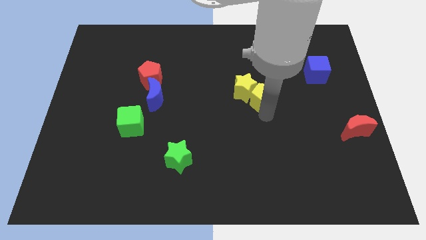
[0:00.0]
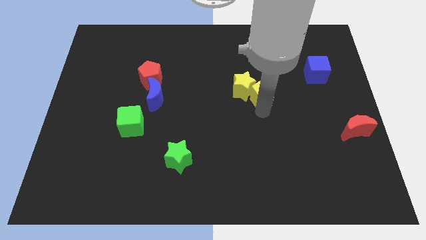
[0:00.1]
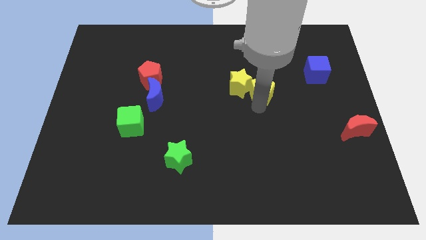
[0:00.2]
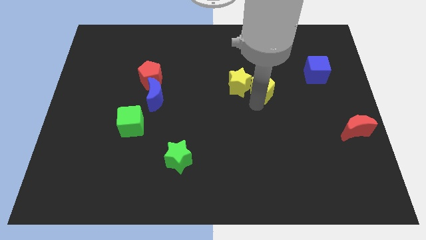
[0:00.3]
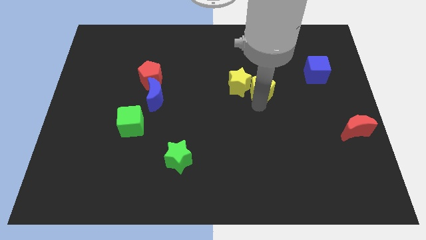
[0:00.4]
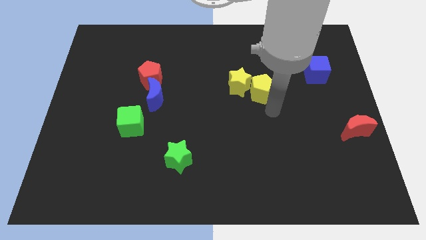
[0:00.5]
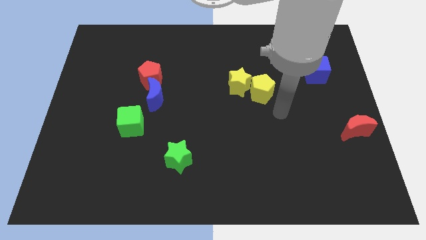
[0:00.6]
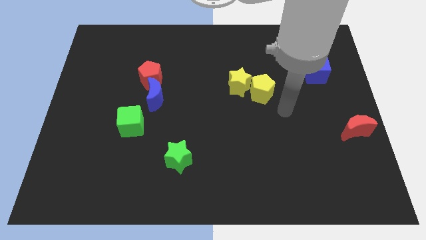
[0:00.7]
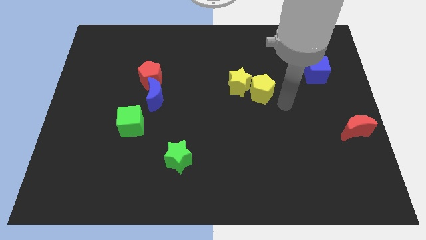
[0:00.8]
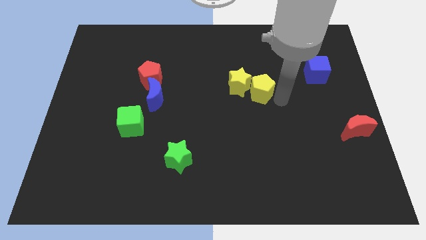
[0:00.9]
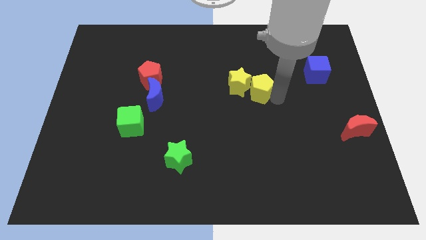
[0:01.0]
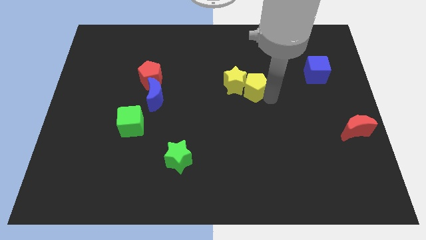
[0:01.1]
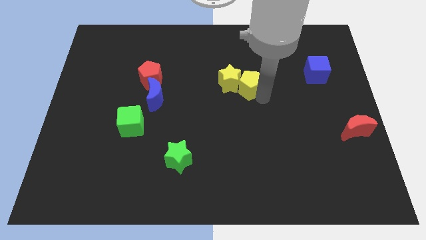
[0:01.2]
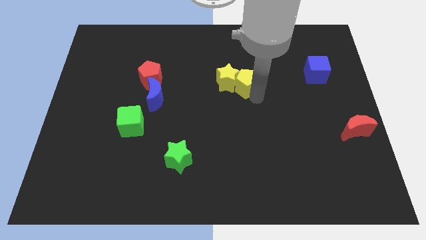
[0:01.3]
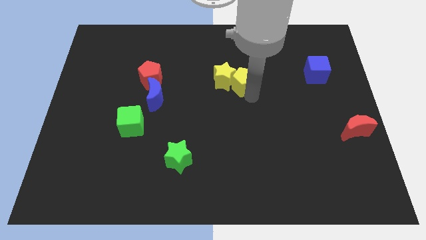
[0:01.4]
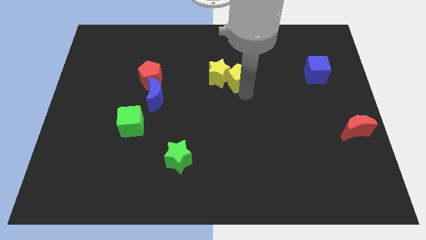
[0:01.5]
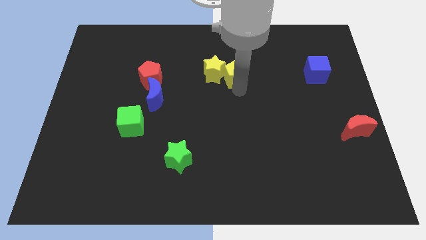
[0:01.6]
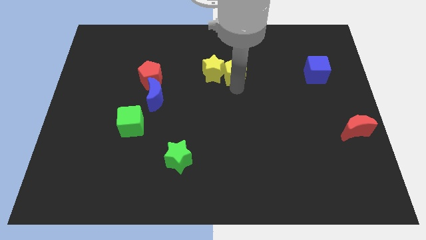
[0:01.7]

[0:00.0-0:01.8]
place the yellow blocks in between the red pentagon and blue cube

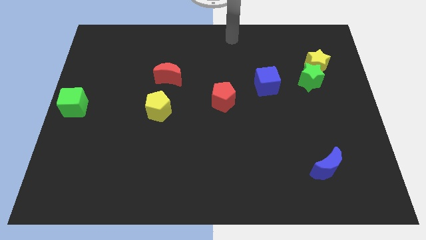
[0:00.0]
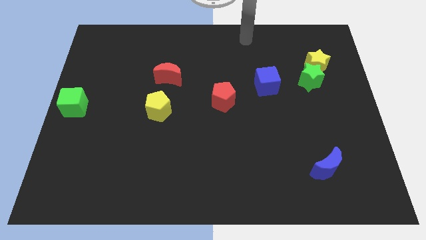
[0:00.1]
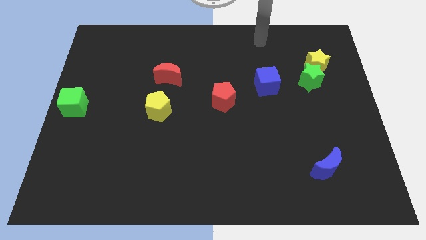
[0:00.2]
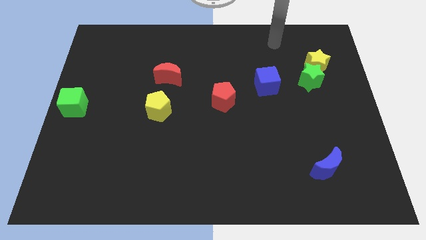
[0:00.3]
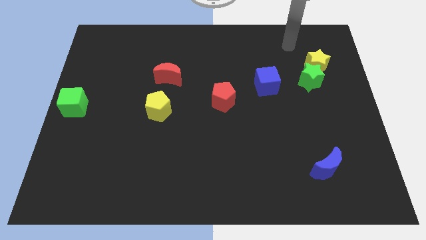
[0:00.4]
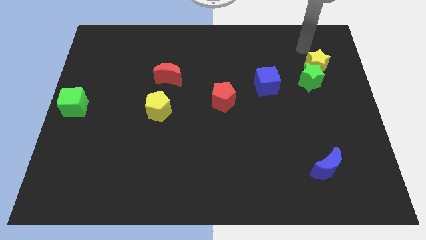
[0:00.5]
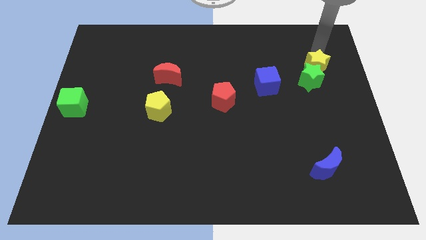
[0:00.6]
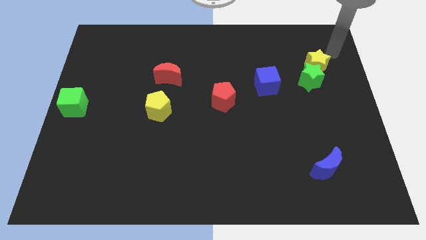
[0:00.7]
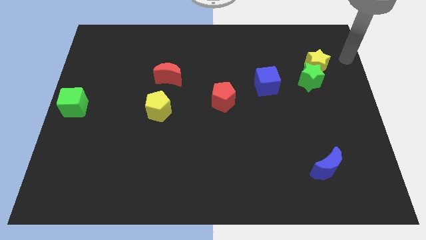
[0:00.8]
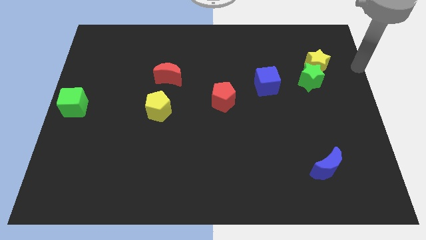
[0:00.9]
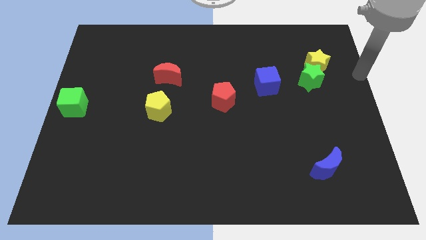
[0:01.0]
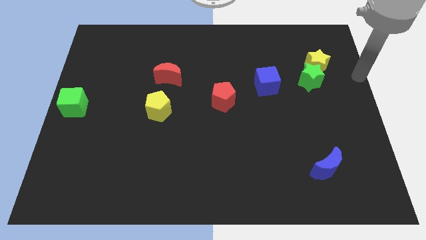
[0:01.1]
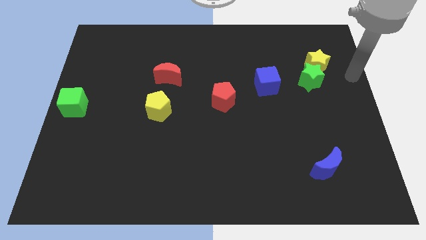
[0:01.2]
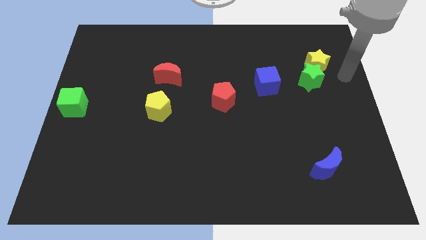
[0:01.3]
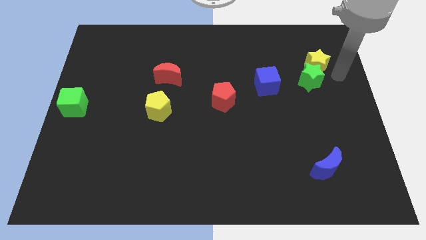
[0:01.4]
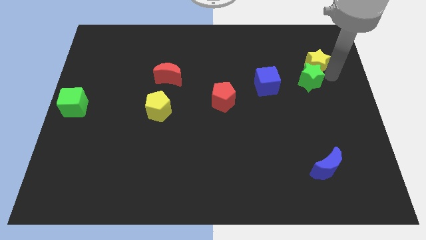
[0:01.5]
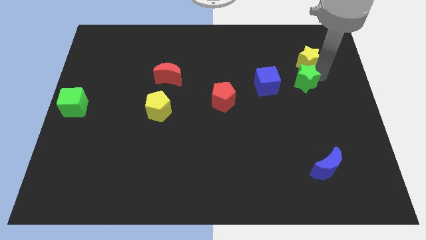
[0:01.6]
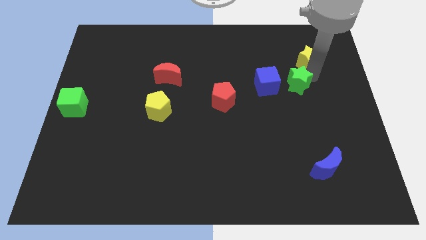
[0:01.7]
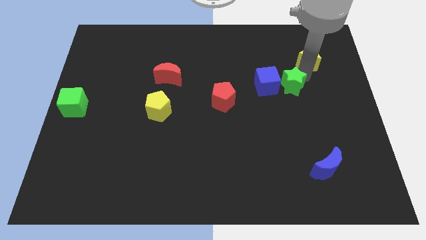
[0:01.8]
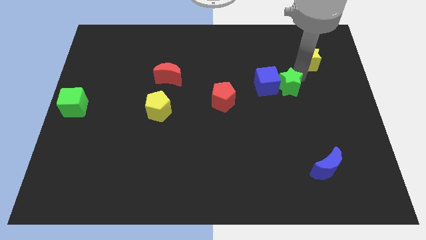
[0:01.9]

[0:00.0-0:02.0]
separate the yellow star from the green star

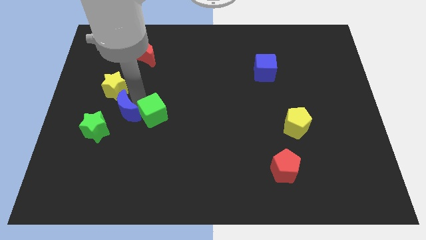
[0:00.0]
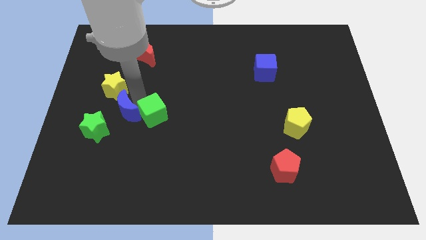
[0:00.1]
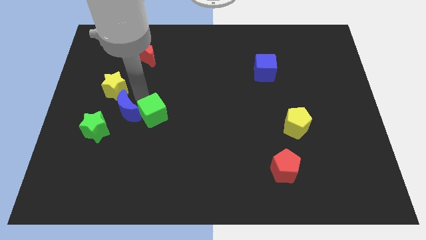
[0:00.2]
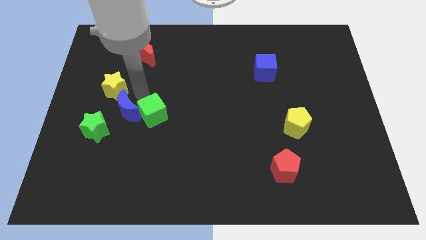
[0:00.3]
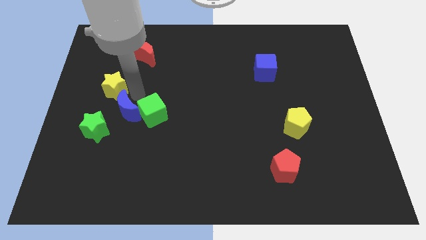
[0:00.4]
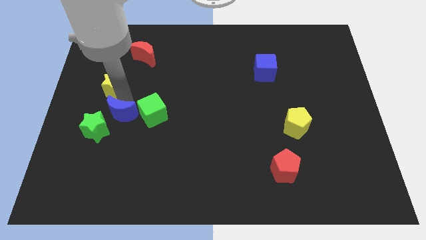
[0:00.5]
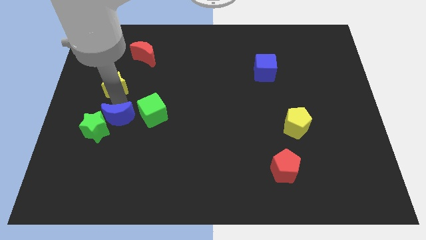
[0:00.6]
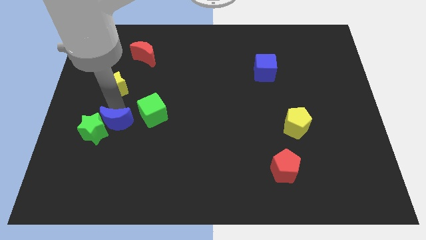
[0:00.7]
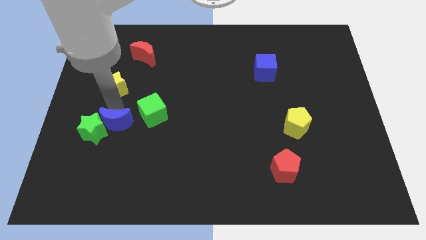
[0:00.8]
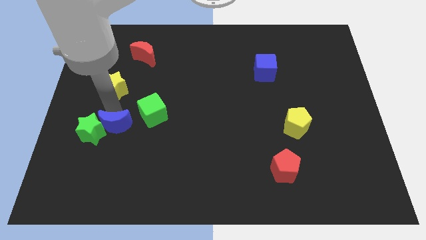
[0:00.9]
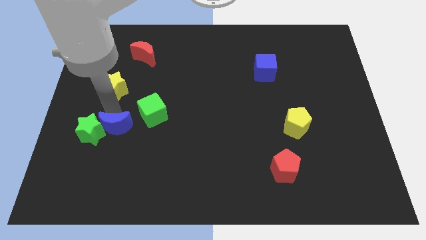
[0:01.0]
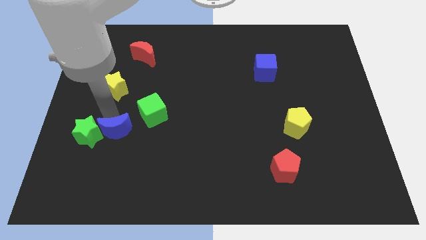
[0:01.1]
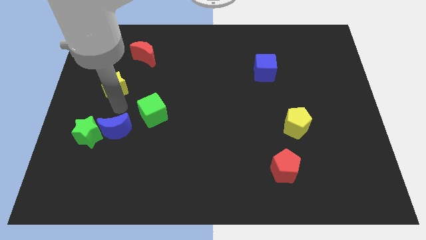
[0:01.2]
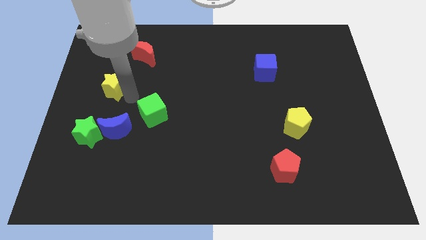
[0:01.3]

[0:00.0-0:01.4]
slide the blue crescent to the right side of the green star

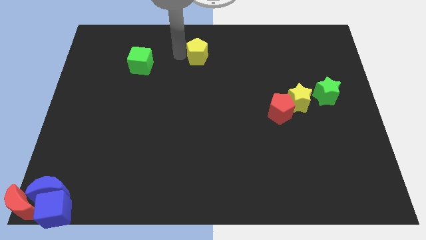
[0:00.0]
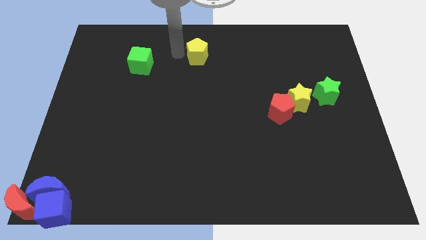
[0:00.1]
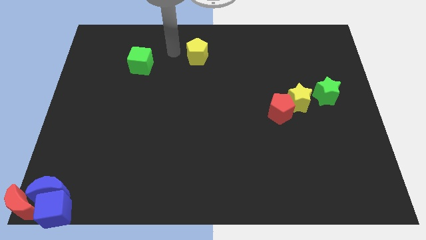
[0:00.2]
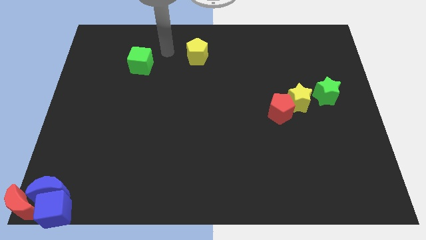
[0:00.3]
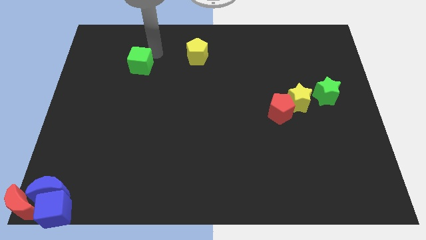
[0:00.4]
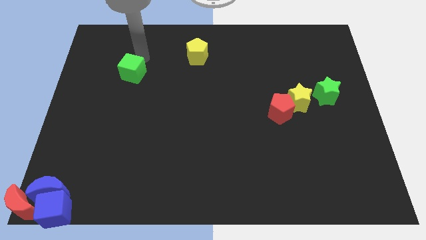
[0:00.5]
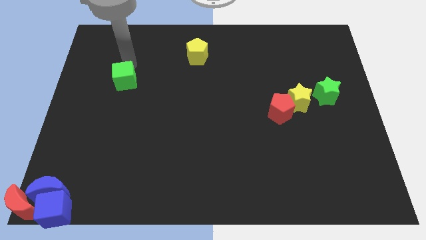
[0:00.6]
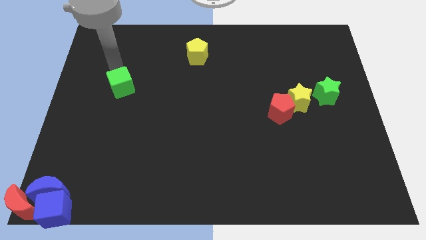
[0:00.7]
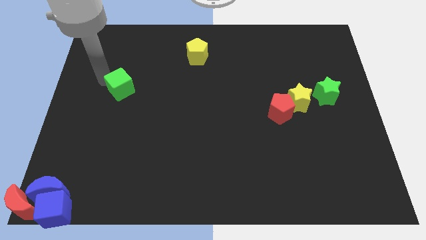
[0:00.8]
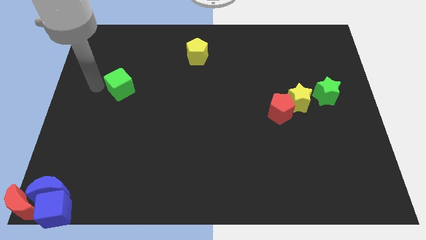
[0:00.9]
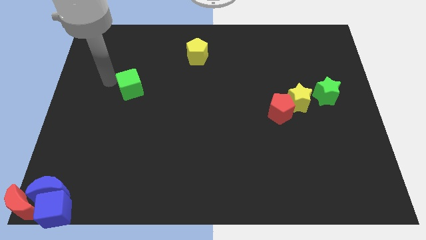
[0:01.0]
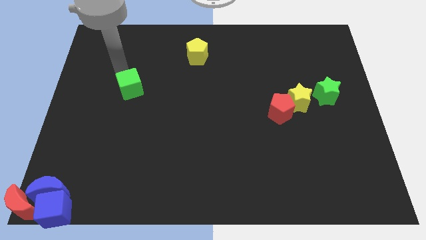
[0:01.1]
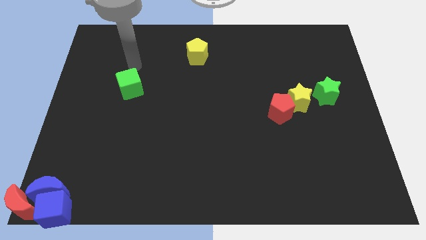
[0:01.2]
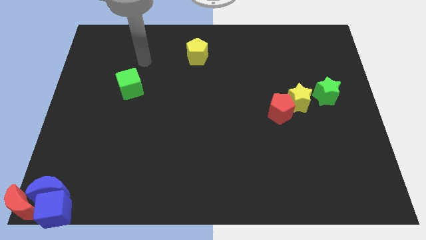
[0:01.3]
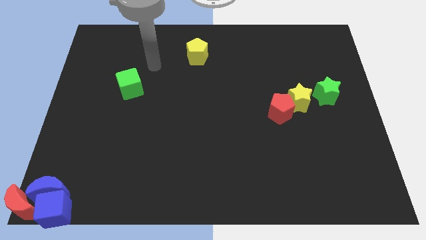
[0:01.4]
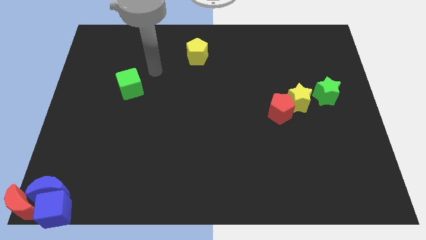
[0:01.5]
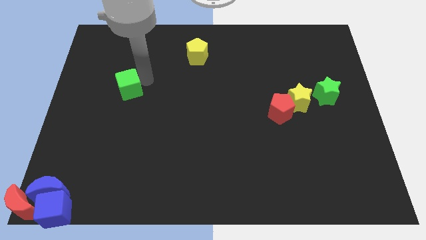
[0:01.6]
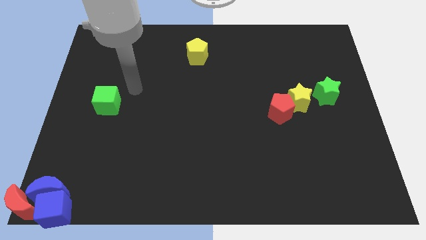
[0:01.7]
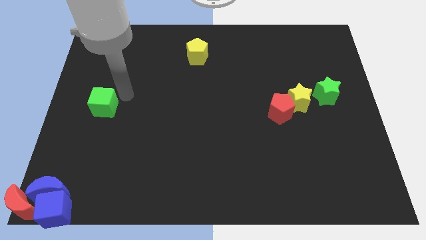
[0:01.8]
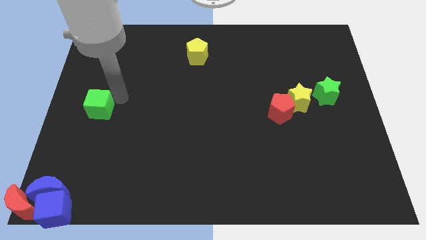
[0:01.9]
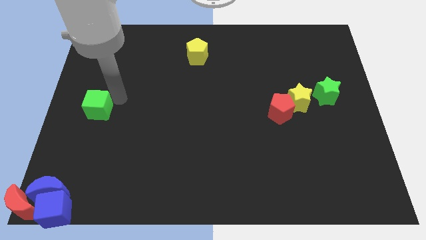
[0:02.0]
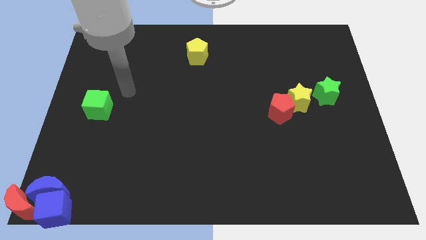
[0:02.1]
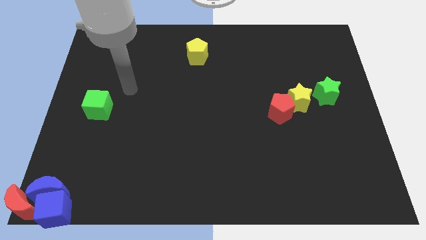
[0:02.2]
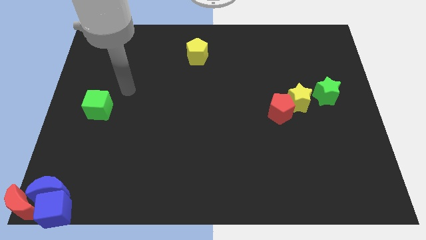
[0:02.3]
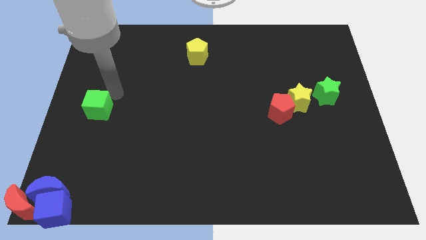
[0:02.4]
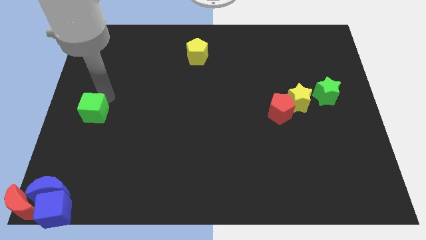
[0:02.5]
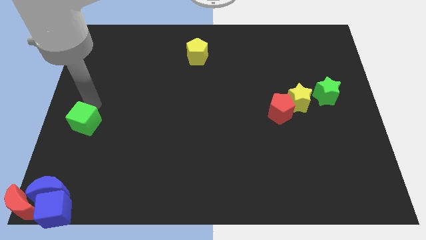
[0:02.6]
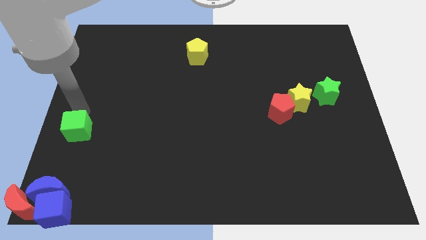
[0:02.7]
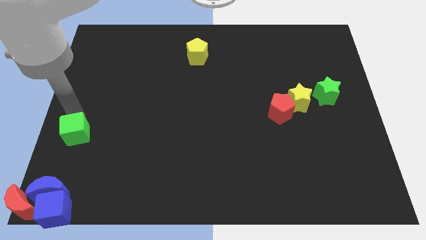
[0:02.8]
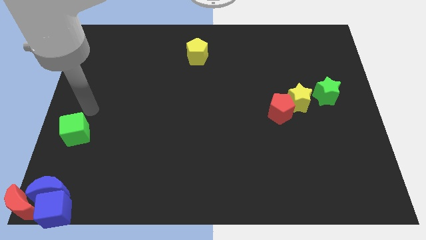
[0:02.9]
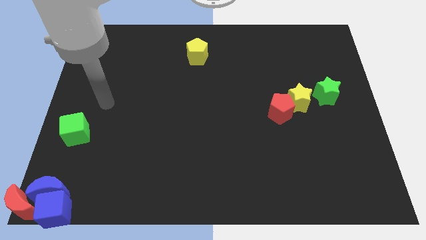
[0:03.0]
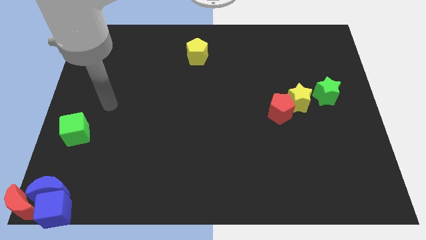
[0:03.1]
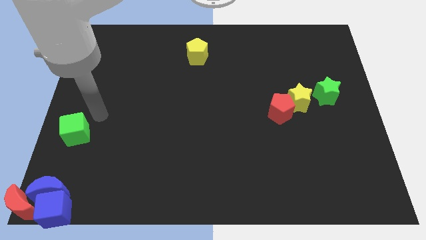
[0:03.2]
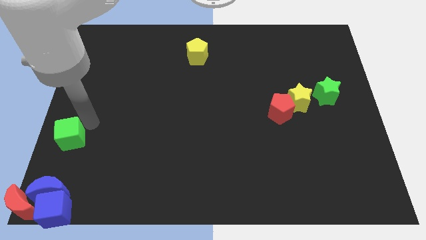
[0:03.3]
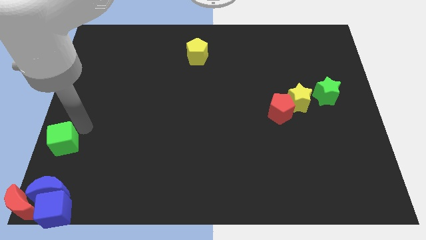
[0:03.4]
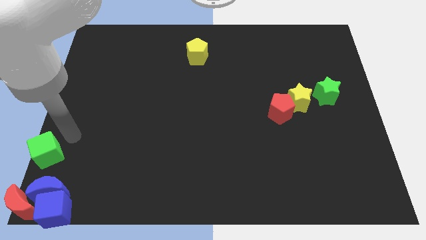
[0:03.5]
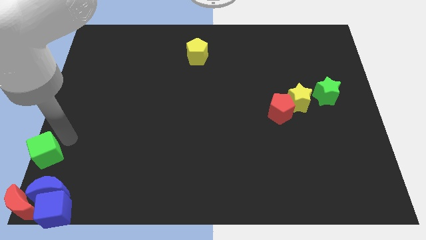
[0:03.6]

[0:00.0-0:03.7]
drag the green cube towards the group of blocks
